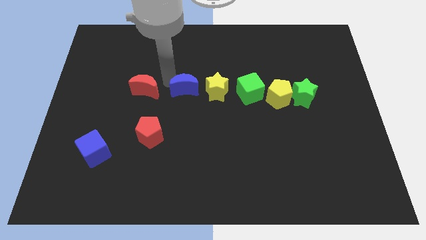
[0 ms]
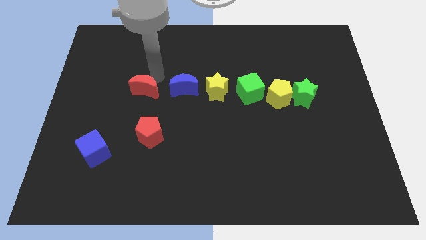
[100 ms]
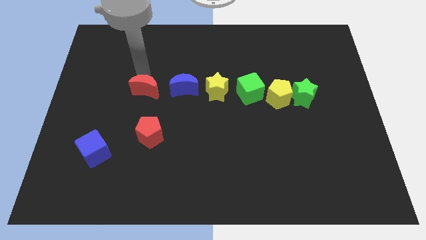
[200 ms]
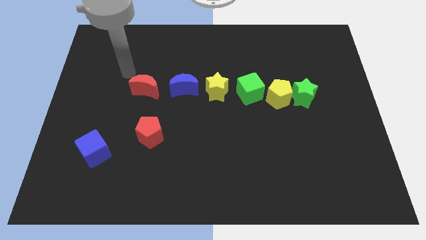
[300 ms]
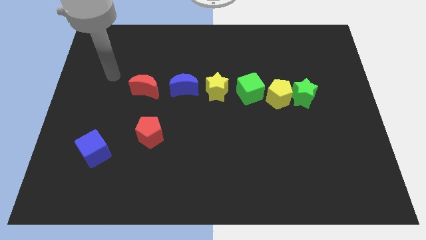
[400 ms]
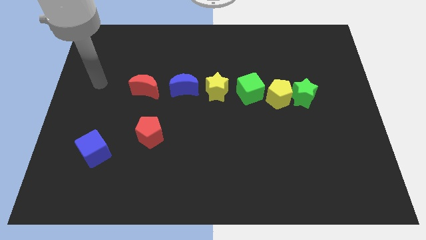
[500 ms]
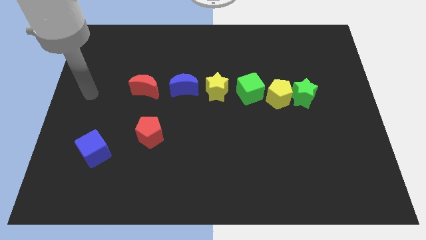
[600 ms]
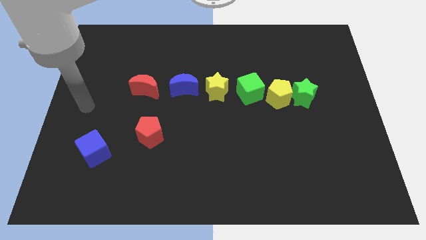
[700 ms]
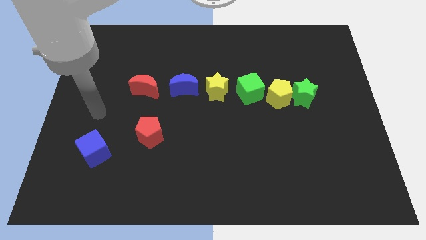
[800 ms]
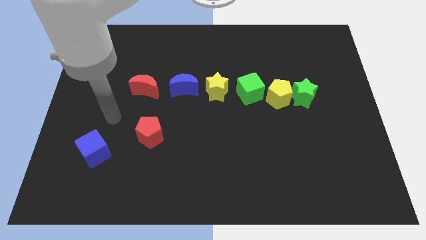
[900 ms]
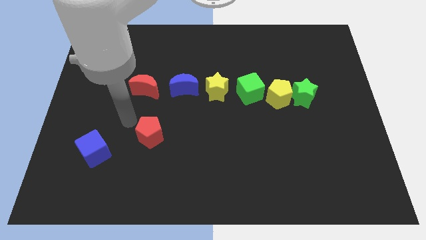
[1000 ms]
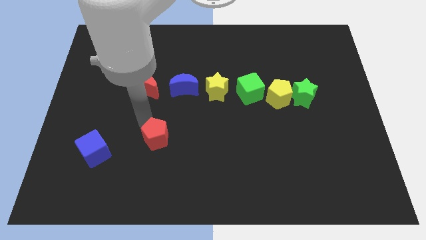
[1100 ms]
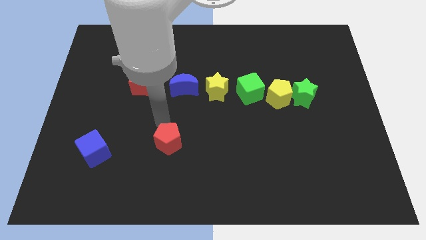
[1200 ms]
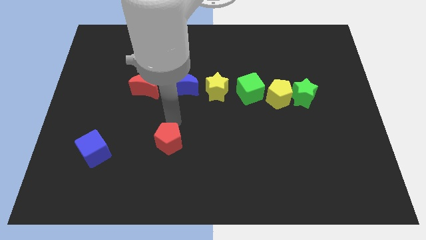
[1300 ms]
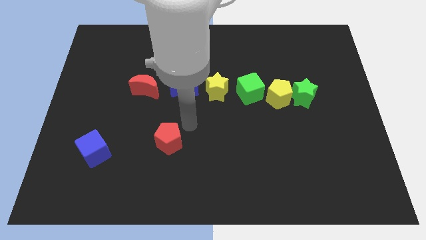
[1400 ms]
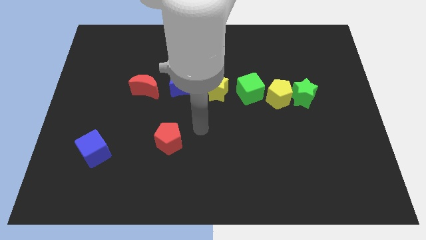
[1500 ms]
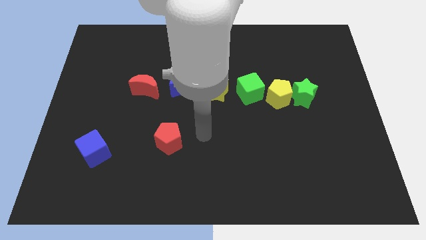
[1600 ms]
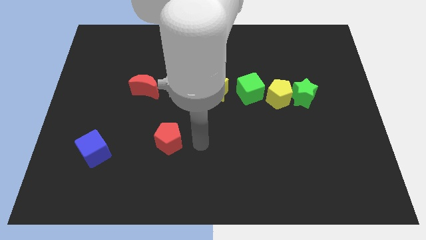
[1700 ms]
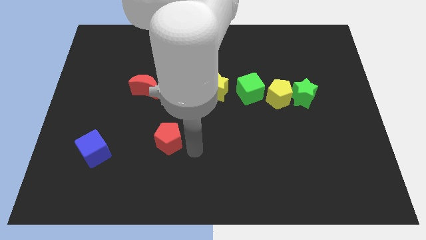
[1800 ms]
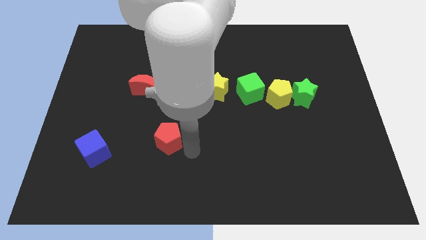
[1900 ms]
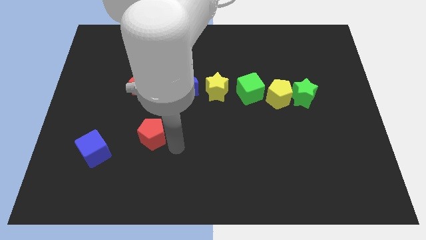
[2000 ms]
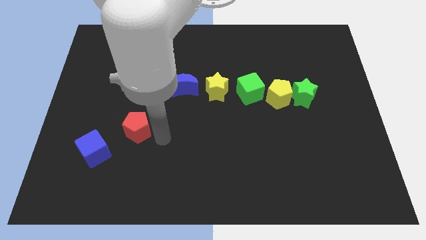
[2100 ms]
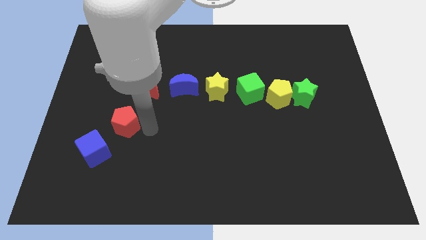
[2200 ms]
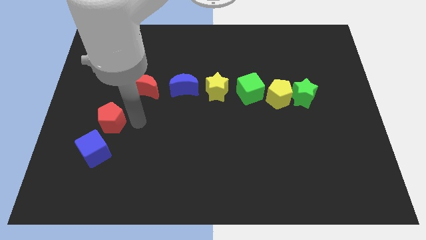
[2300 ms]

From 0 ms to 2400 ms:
move the red pentagon to the top of the blue cube

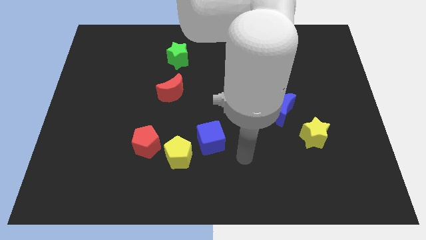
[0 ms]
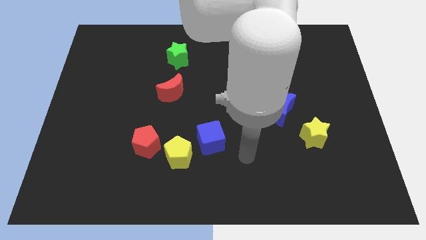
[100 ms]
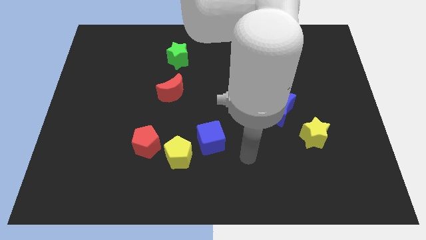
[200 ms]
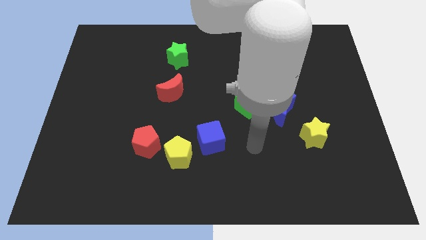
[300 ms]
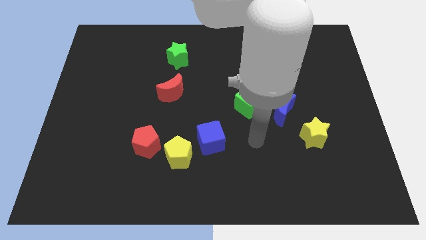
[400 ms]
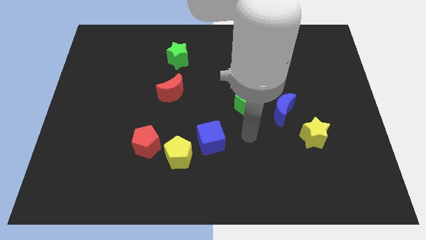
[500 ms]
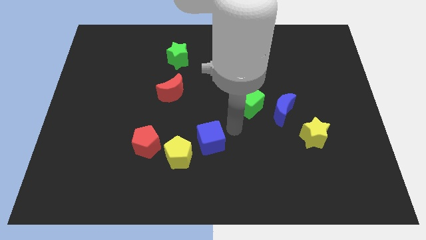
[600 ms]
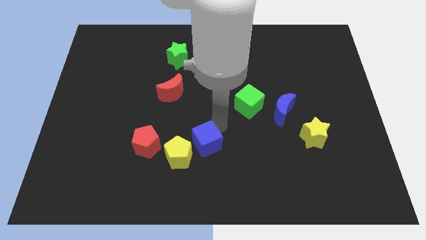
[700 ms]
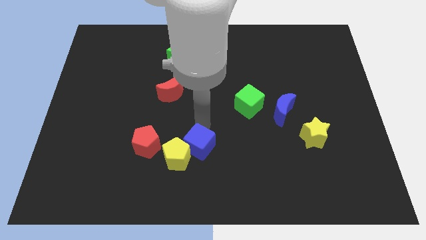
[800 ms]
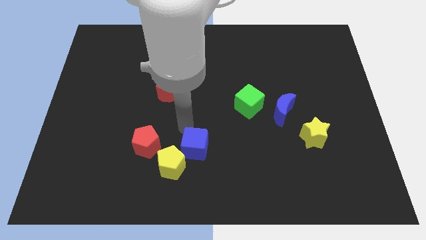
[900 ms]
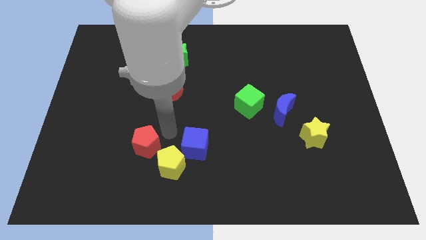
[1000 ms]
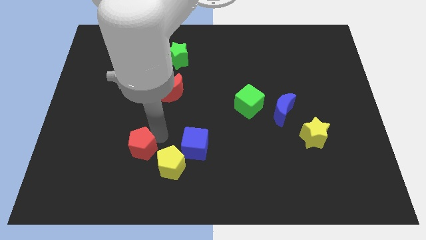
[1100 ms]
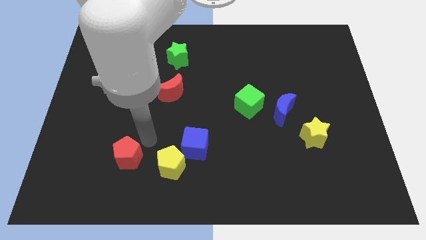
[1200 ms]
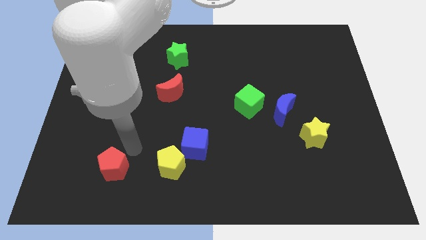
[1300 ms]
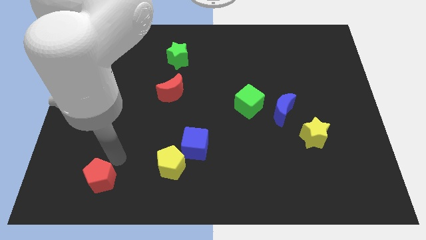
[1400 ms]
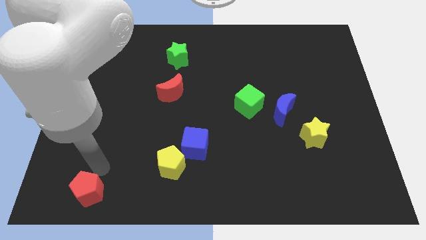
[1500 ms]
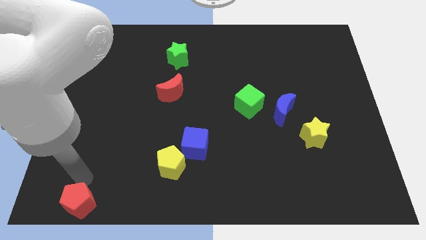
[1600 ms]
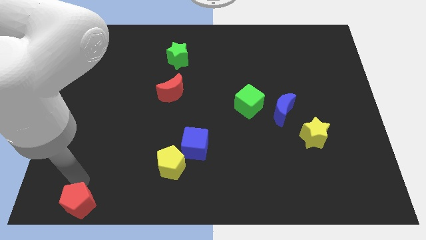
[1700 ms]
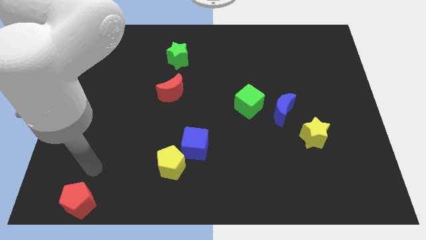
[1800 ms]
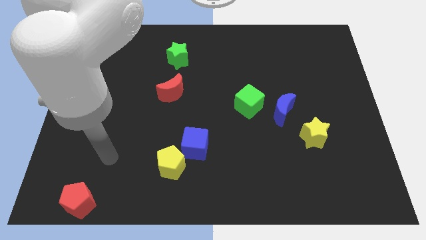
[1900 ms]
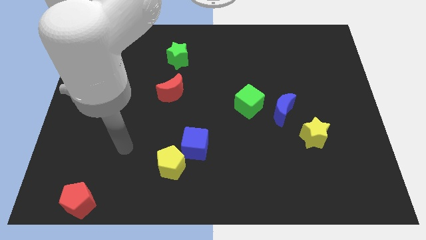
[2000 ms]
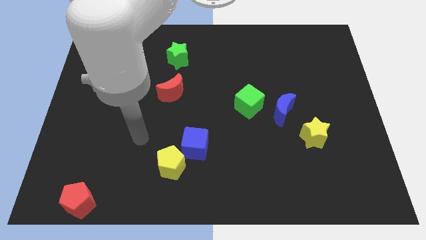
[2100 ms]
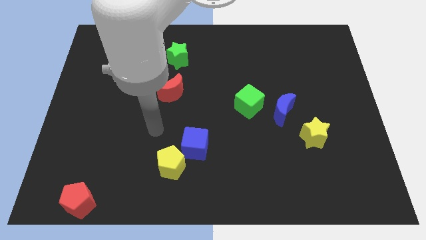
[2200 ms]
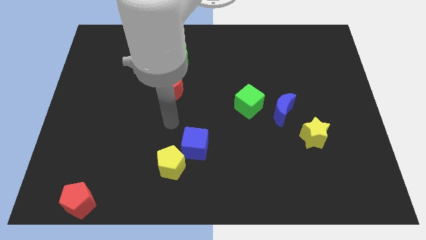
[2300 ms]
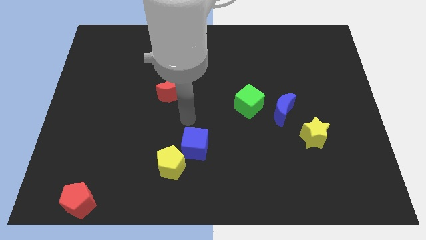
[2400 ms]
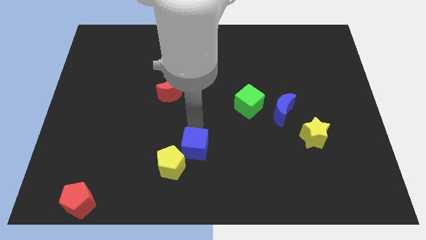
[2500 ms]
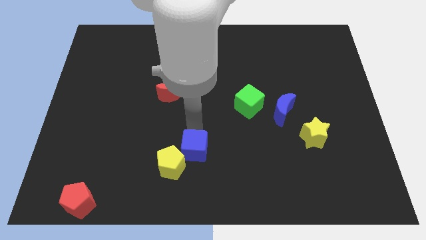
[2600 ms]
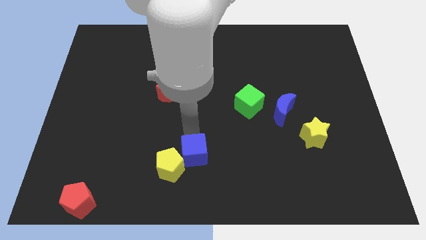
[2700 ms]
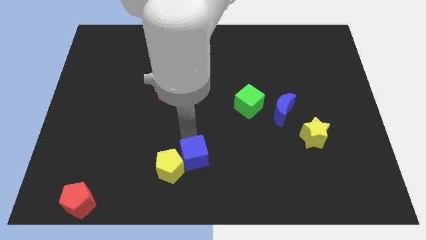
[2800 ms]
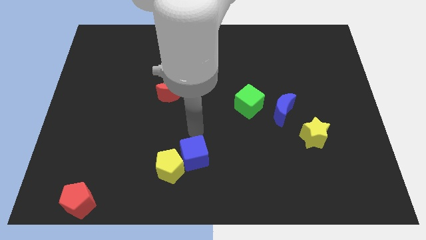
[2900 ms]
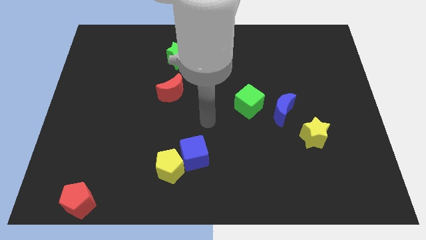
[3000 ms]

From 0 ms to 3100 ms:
move the red pentagon towards the bottom left of the board

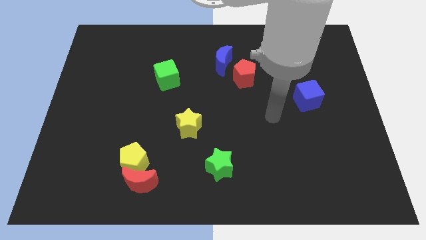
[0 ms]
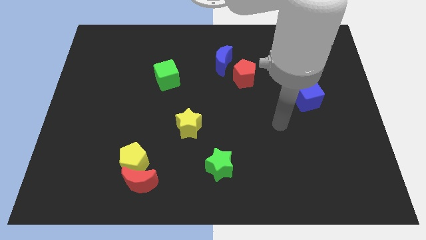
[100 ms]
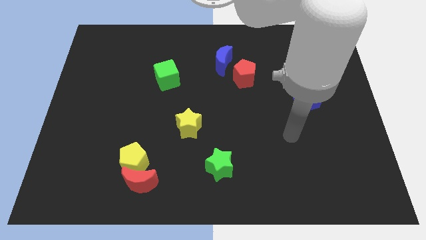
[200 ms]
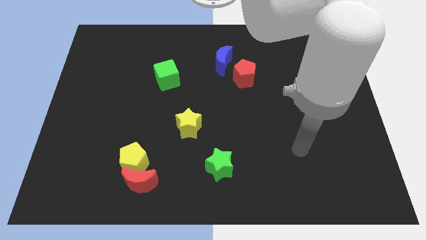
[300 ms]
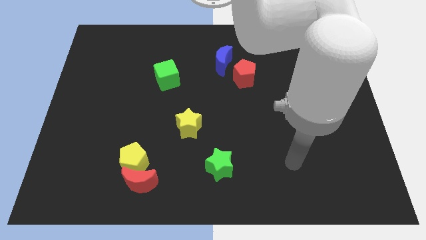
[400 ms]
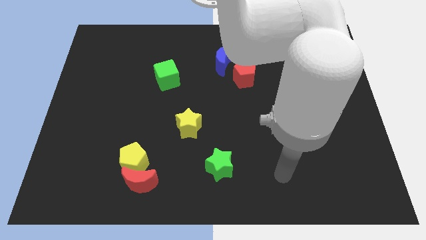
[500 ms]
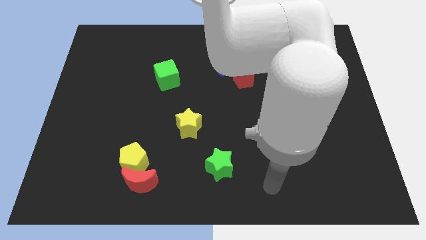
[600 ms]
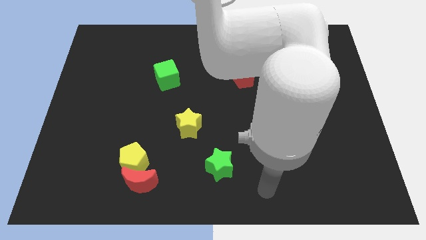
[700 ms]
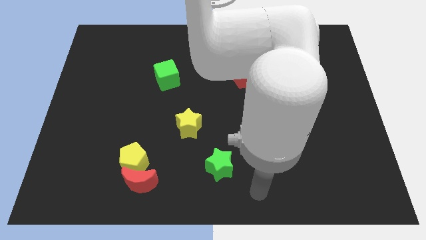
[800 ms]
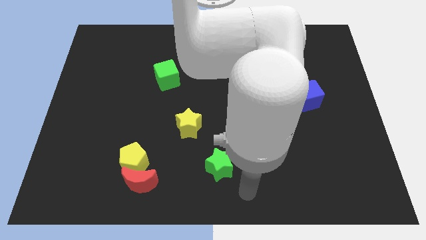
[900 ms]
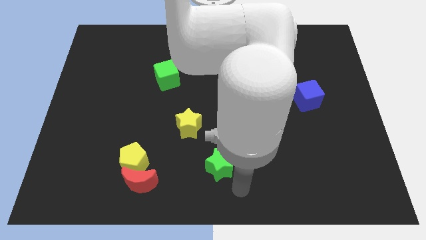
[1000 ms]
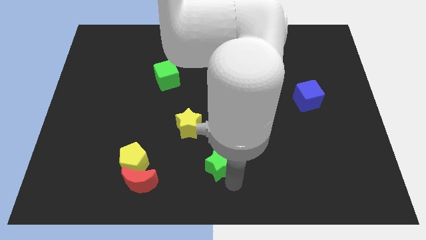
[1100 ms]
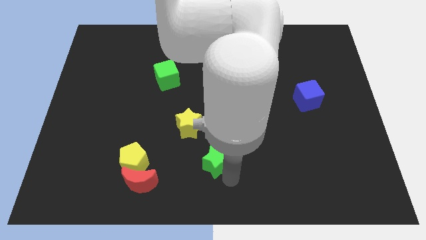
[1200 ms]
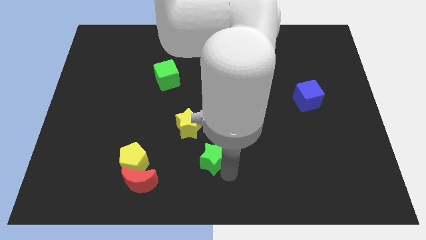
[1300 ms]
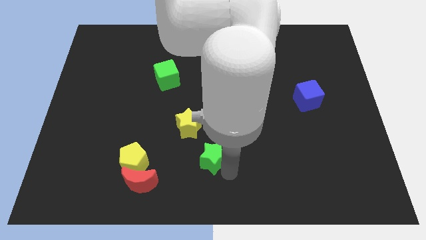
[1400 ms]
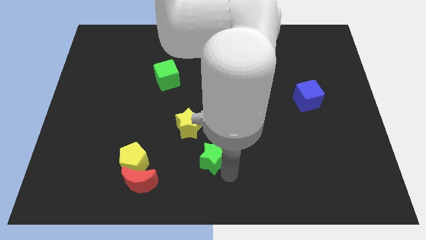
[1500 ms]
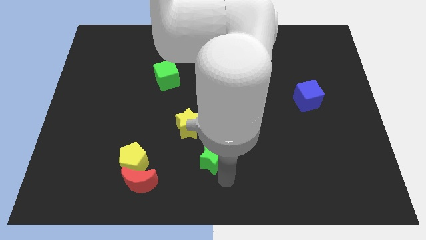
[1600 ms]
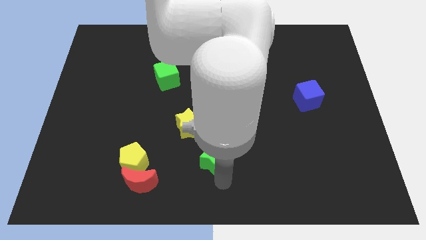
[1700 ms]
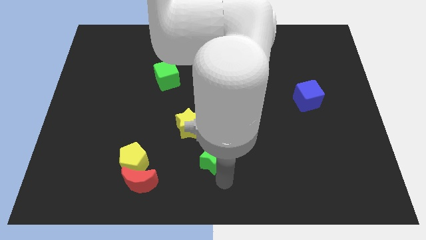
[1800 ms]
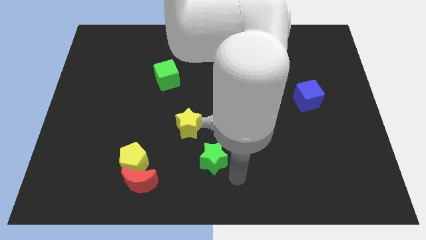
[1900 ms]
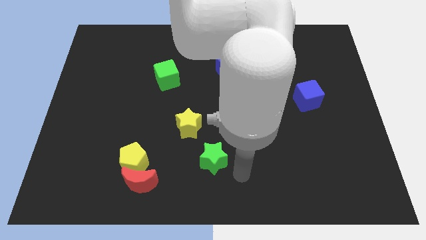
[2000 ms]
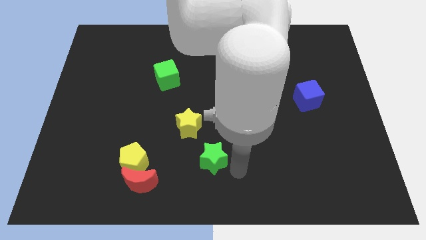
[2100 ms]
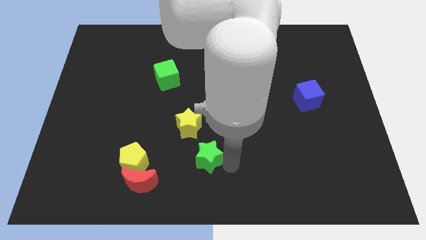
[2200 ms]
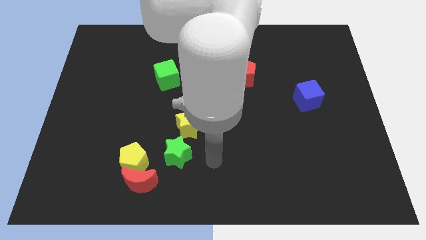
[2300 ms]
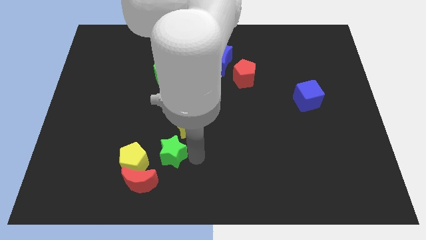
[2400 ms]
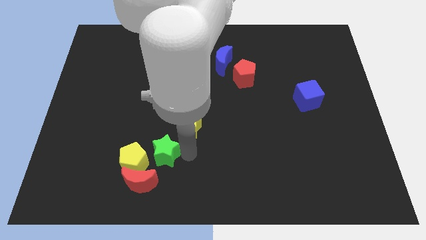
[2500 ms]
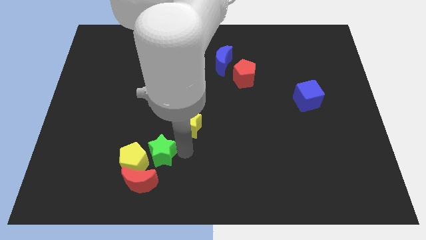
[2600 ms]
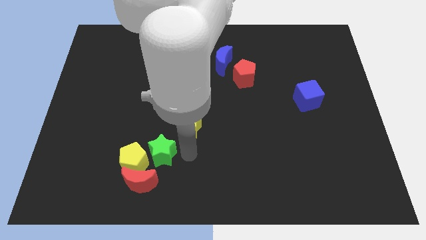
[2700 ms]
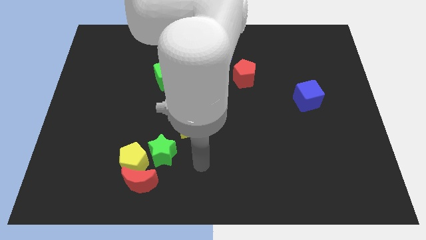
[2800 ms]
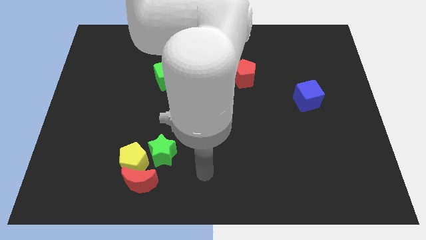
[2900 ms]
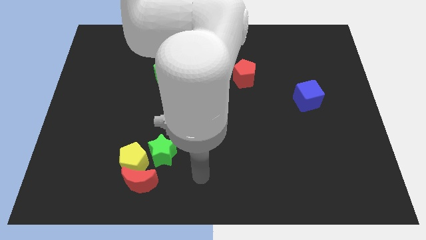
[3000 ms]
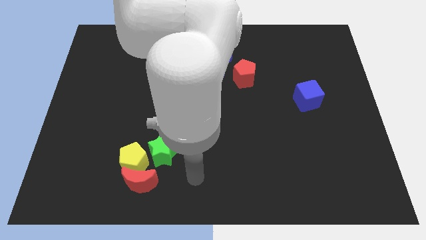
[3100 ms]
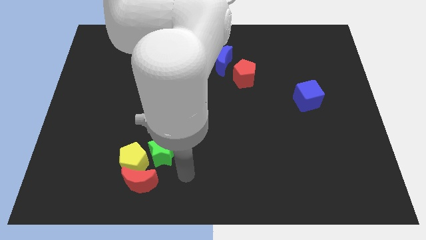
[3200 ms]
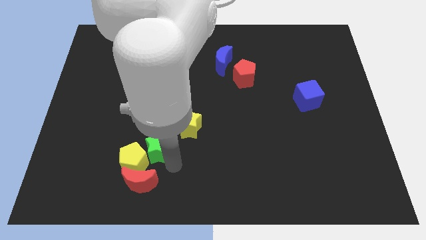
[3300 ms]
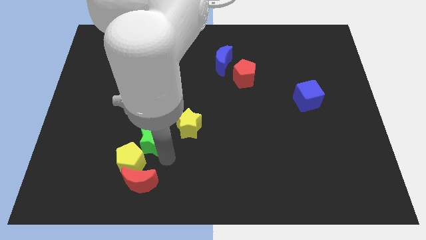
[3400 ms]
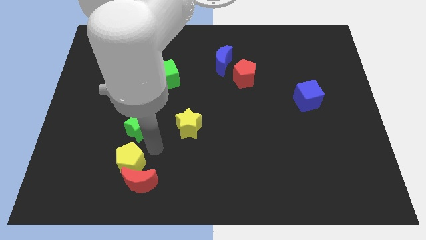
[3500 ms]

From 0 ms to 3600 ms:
place green star to the top of the yellow pentagon
